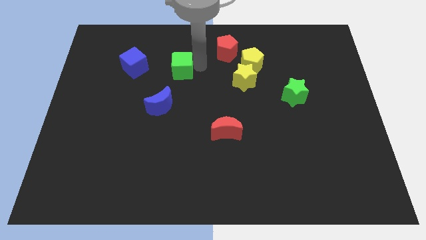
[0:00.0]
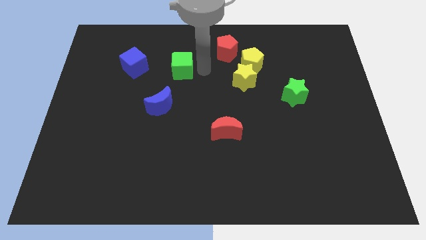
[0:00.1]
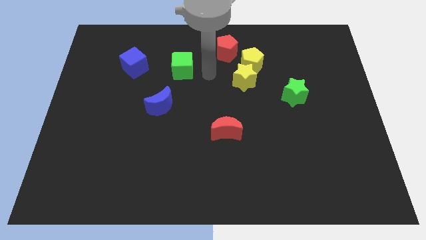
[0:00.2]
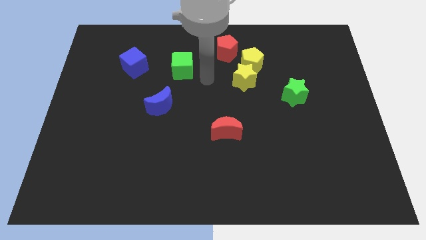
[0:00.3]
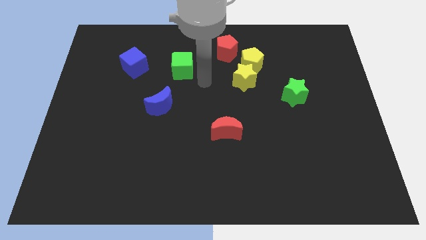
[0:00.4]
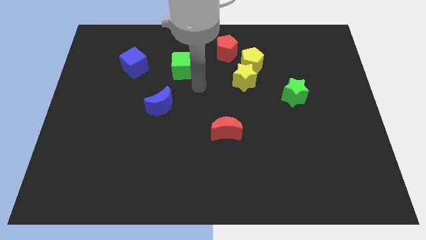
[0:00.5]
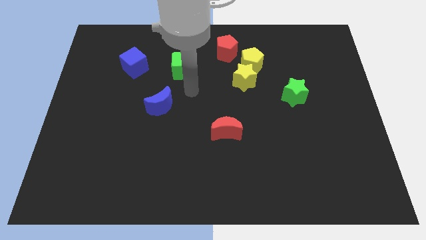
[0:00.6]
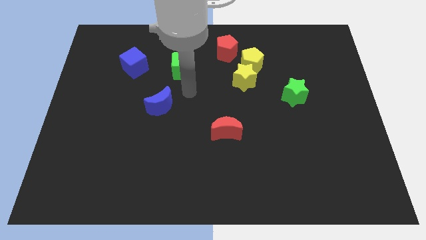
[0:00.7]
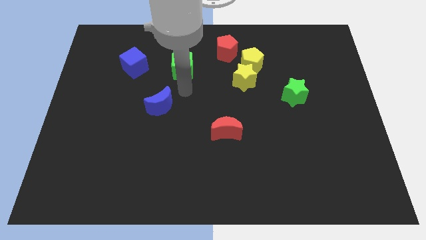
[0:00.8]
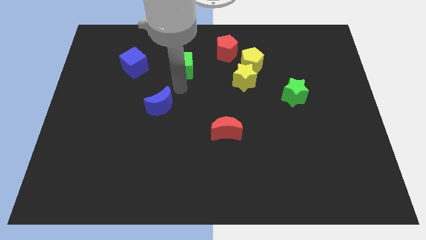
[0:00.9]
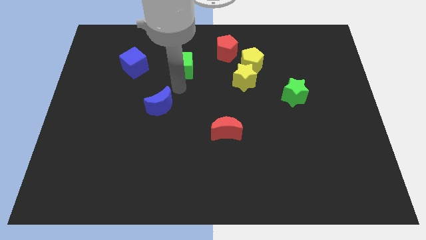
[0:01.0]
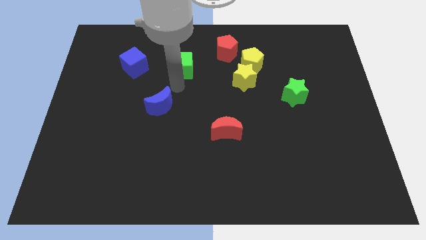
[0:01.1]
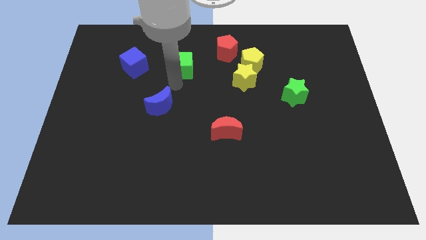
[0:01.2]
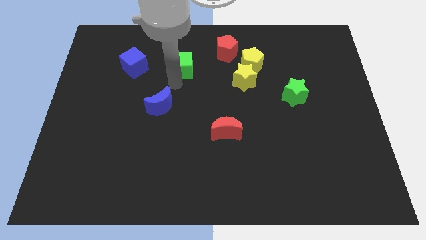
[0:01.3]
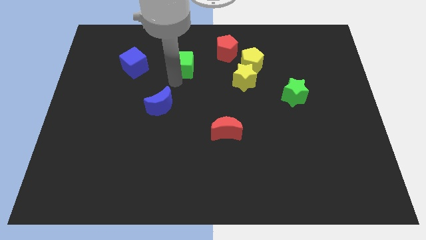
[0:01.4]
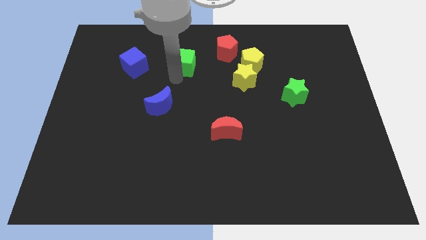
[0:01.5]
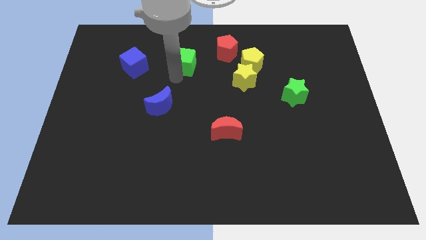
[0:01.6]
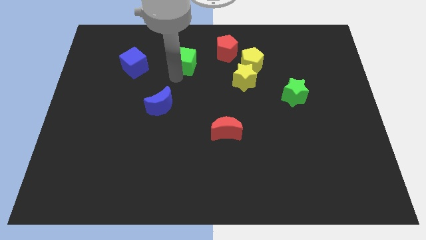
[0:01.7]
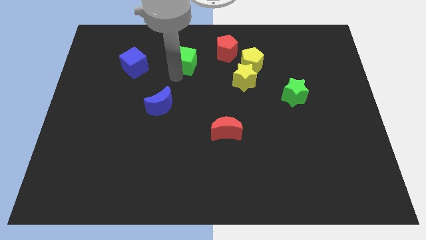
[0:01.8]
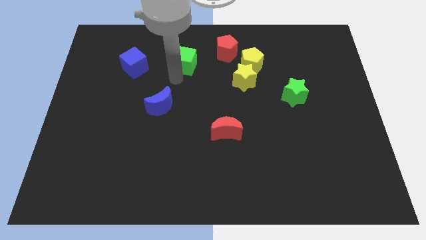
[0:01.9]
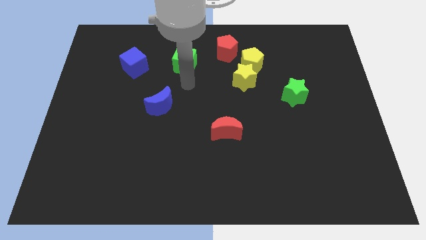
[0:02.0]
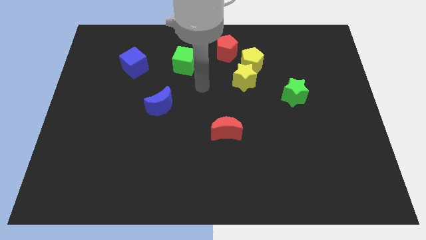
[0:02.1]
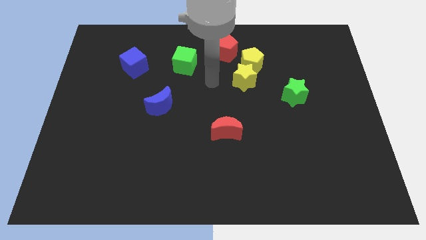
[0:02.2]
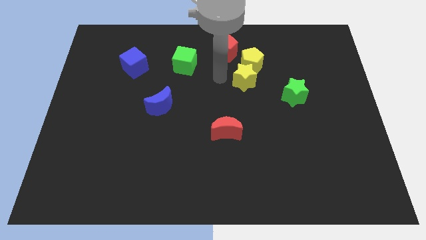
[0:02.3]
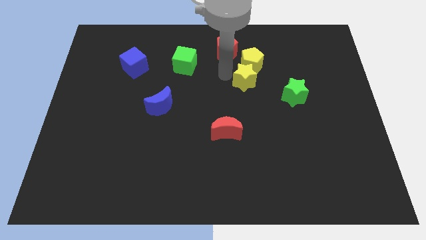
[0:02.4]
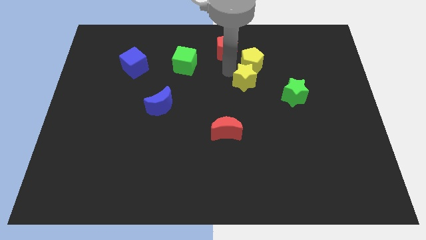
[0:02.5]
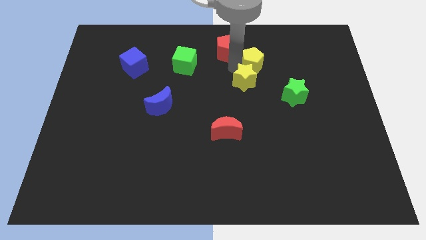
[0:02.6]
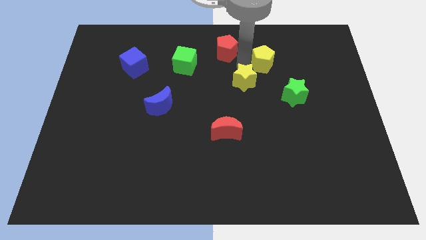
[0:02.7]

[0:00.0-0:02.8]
slightly touch the green cube

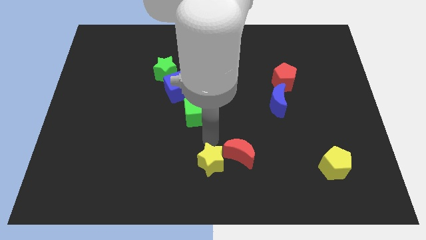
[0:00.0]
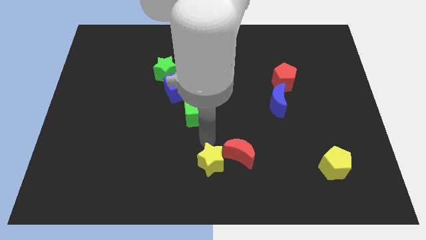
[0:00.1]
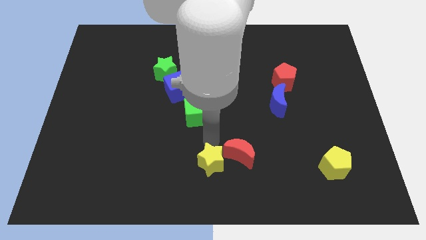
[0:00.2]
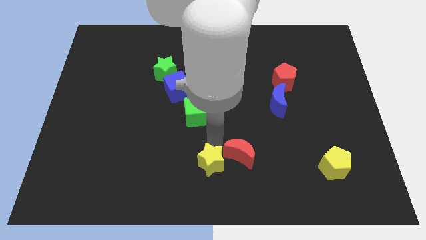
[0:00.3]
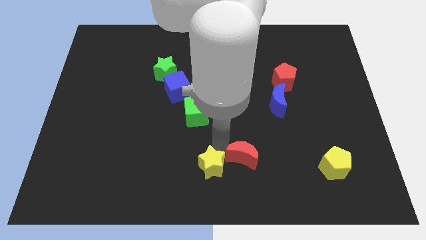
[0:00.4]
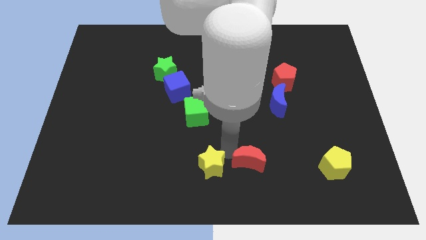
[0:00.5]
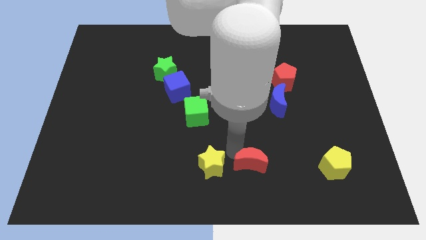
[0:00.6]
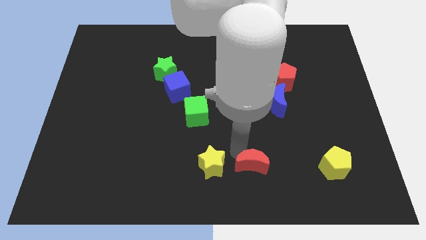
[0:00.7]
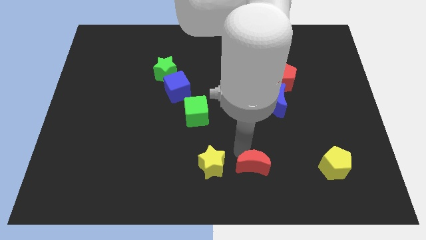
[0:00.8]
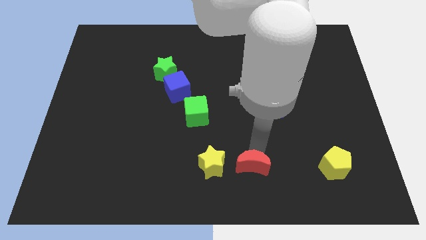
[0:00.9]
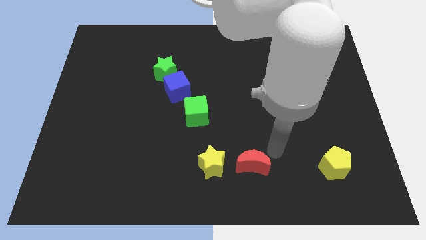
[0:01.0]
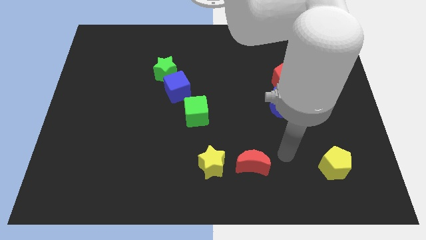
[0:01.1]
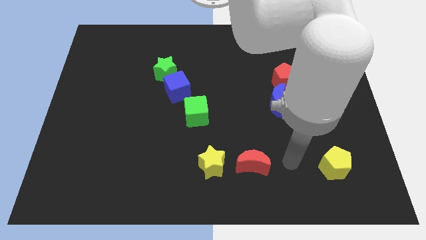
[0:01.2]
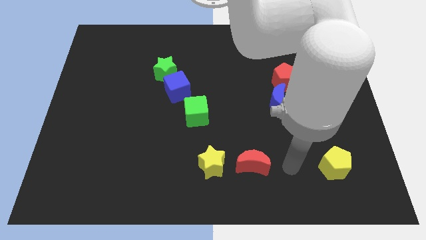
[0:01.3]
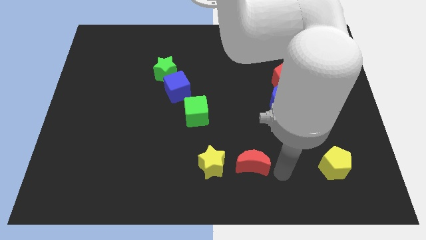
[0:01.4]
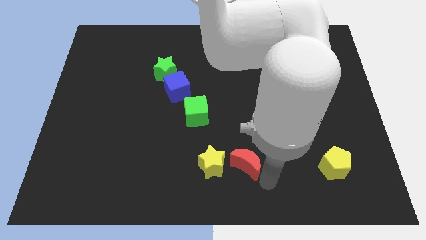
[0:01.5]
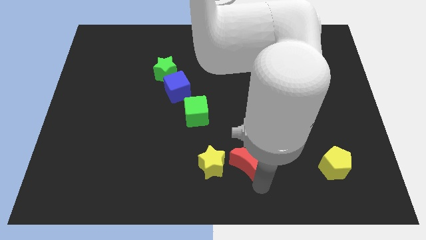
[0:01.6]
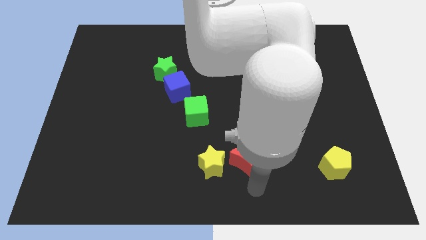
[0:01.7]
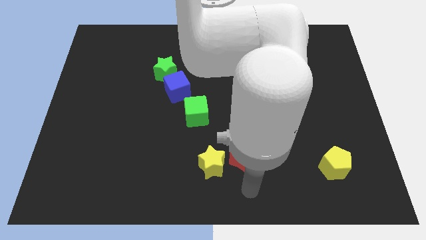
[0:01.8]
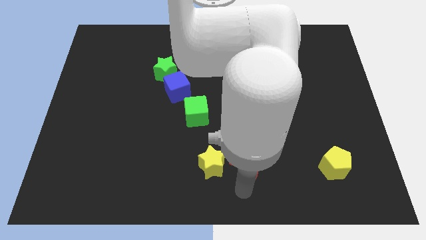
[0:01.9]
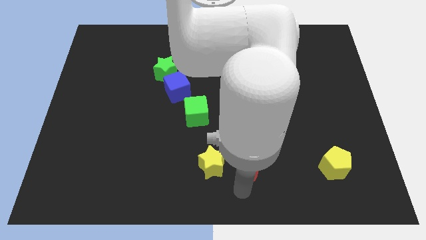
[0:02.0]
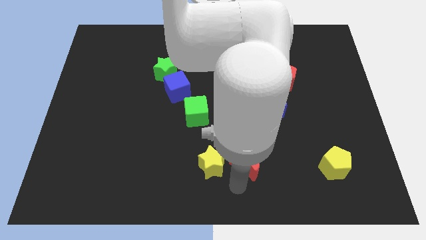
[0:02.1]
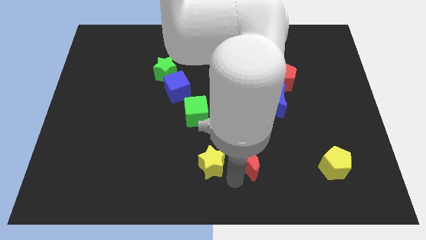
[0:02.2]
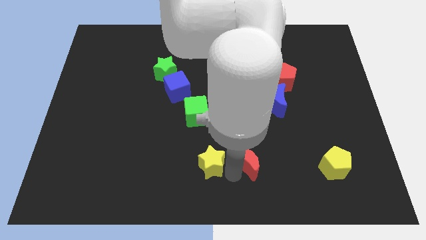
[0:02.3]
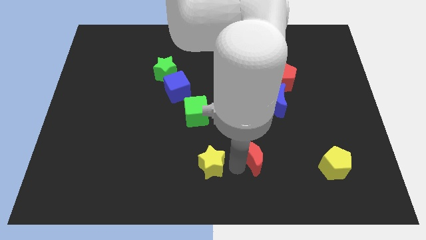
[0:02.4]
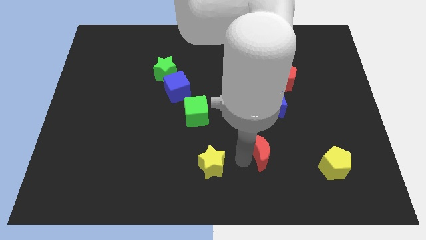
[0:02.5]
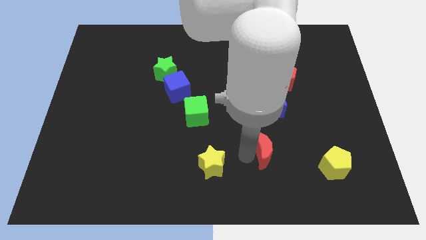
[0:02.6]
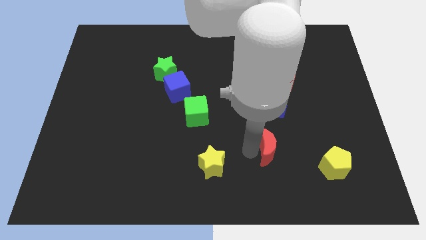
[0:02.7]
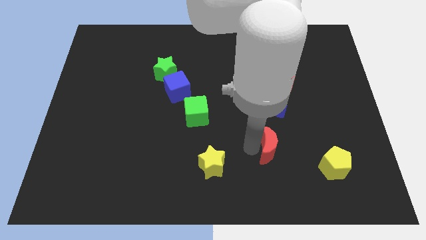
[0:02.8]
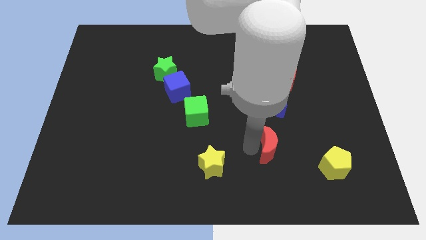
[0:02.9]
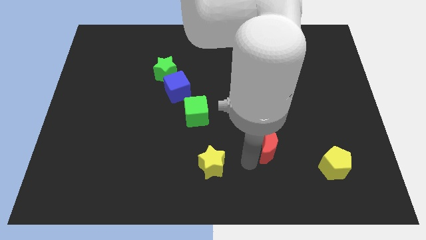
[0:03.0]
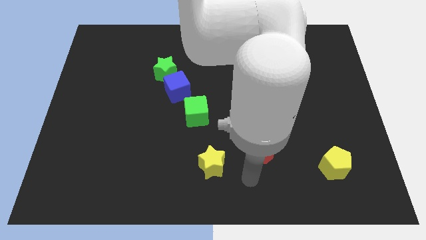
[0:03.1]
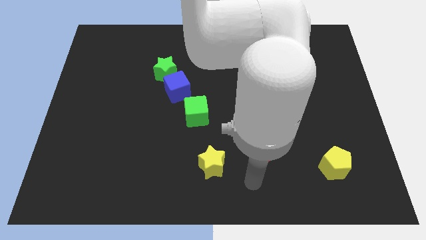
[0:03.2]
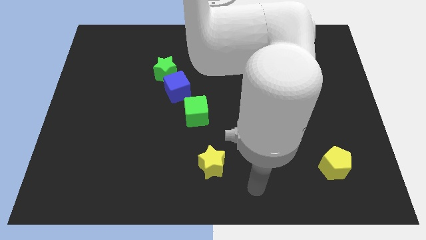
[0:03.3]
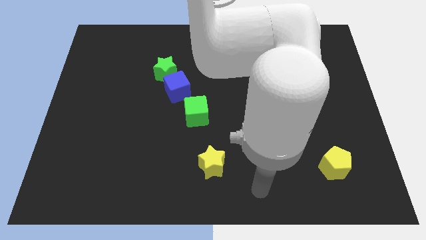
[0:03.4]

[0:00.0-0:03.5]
place red moon to the bottom of blue moon

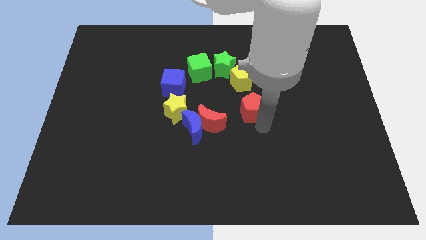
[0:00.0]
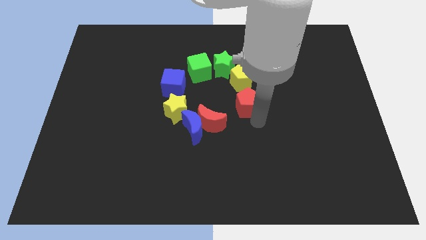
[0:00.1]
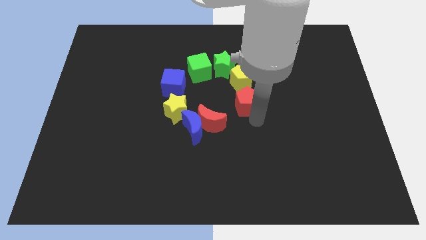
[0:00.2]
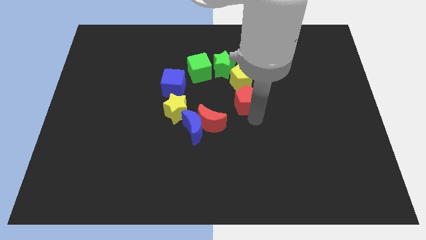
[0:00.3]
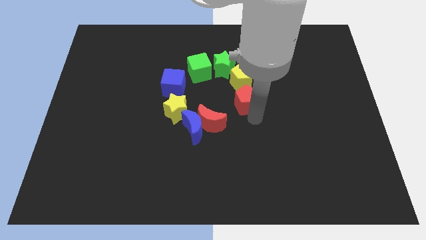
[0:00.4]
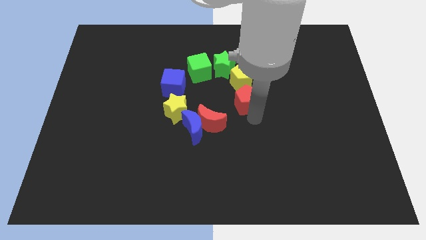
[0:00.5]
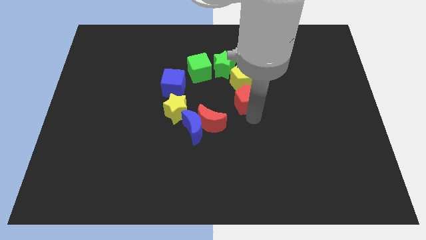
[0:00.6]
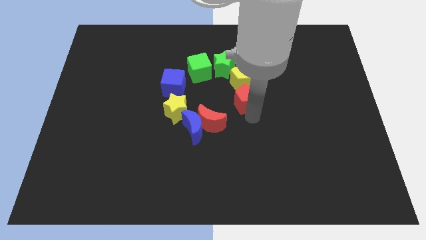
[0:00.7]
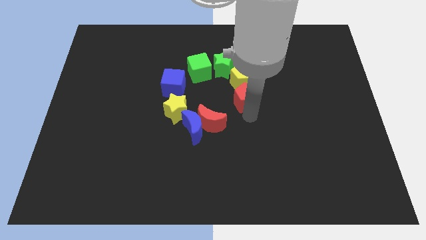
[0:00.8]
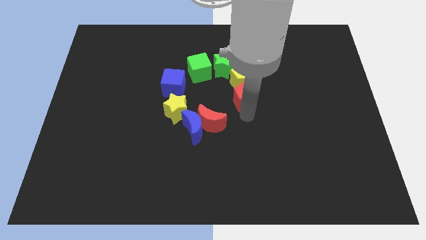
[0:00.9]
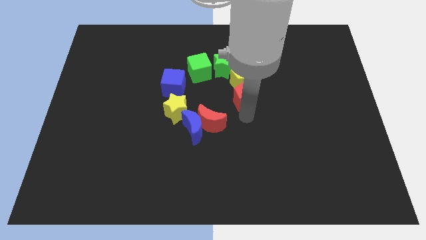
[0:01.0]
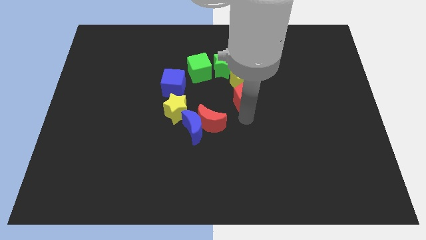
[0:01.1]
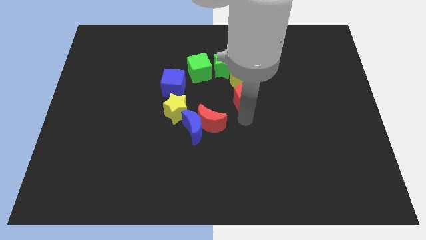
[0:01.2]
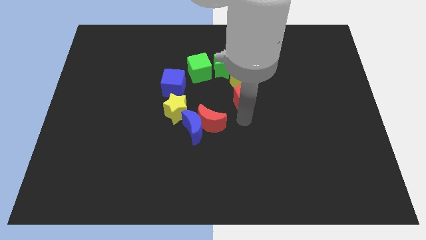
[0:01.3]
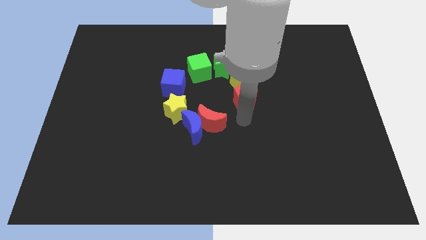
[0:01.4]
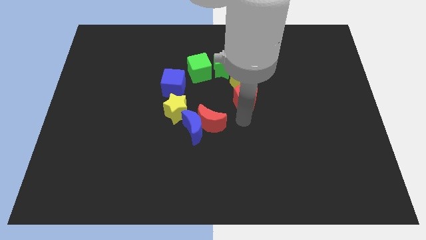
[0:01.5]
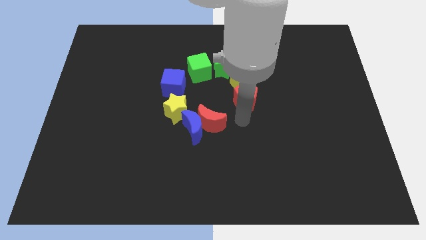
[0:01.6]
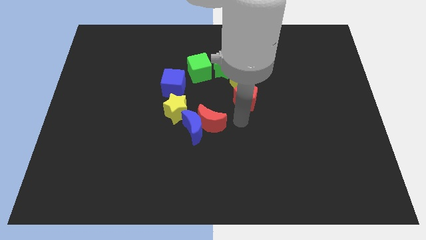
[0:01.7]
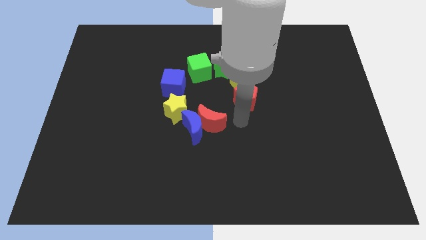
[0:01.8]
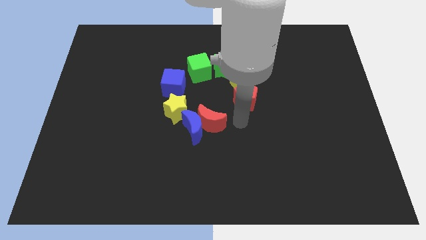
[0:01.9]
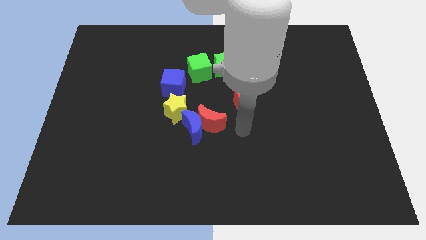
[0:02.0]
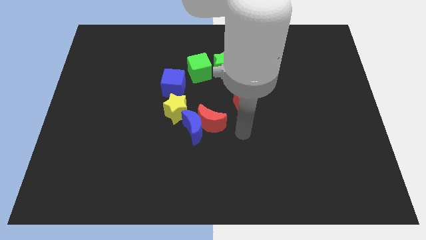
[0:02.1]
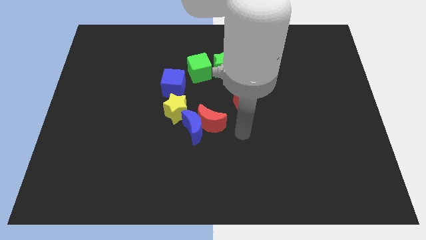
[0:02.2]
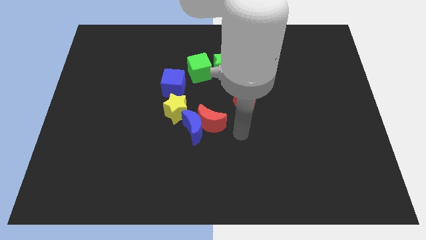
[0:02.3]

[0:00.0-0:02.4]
move red pentagon into yellow pentagon

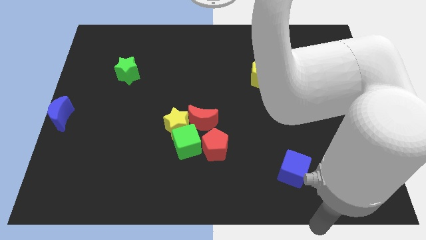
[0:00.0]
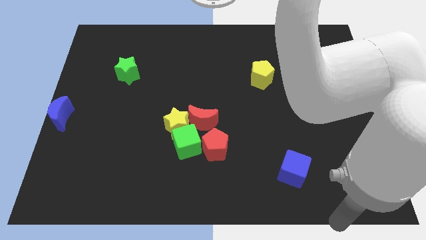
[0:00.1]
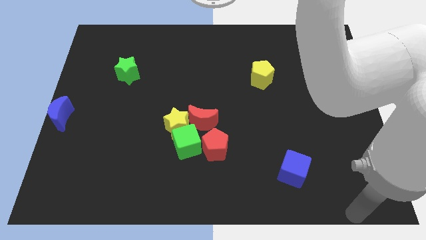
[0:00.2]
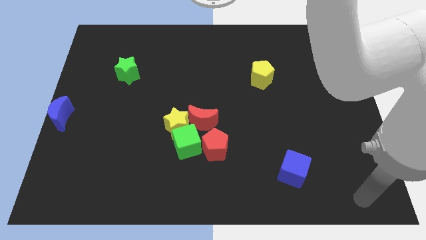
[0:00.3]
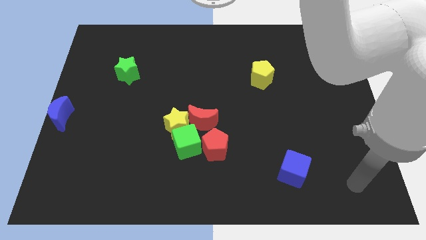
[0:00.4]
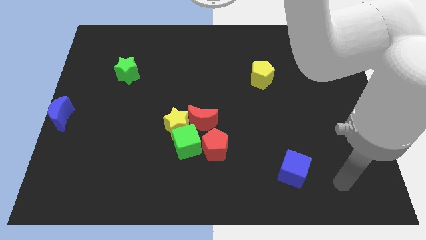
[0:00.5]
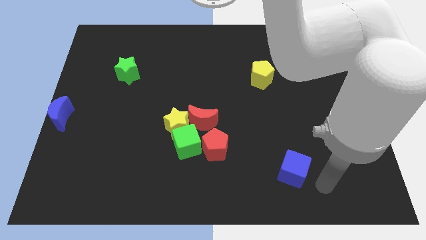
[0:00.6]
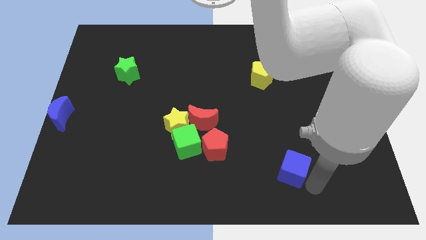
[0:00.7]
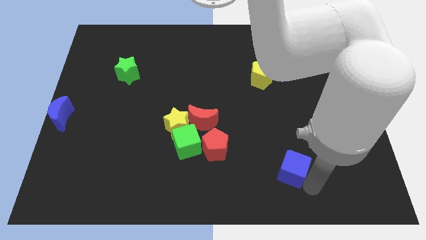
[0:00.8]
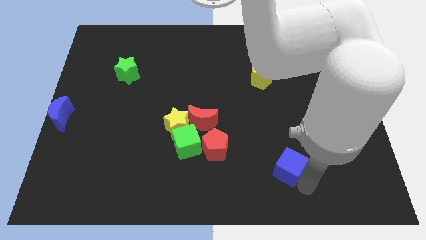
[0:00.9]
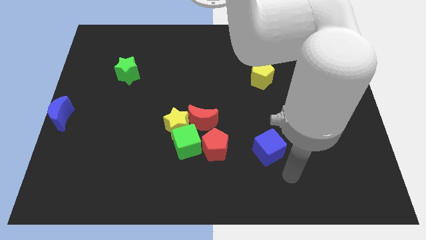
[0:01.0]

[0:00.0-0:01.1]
place the blue cube horizontally to the right side of the red pentagon
